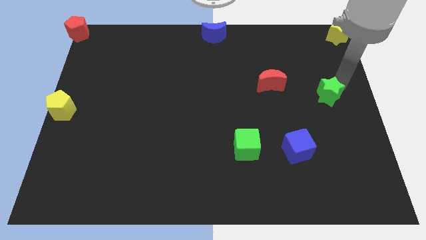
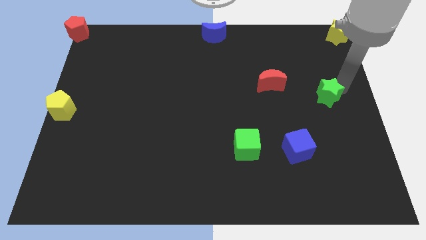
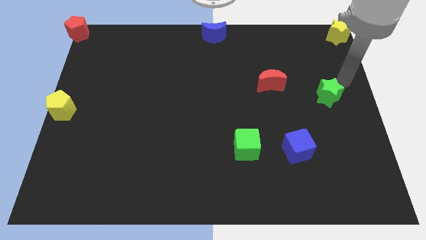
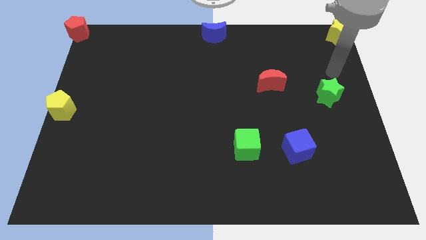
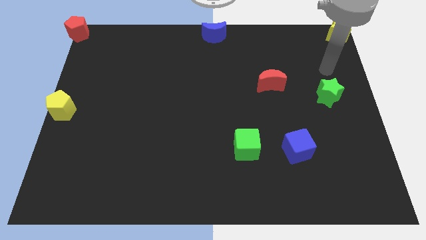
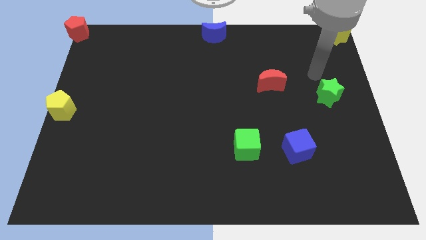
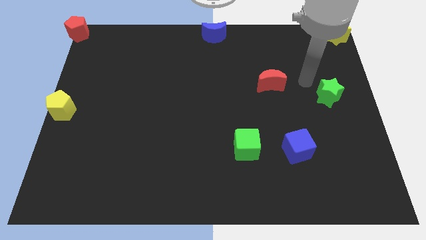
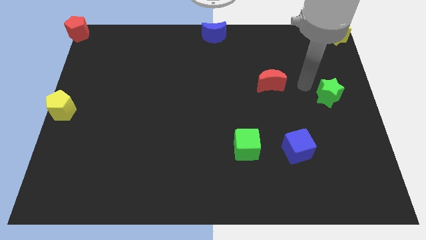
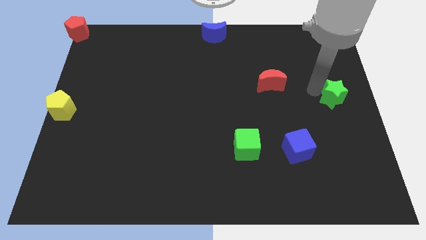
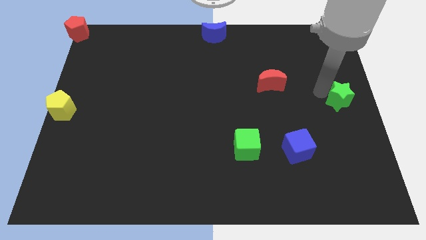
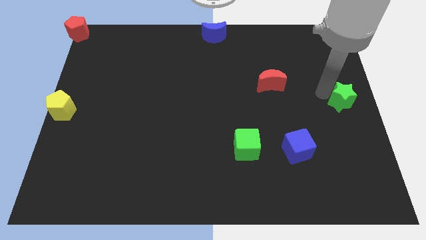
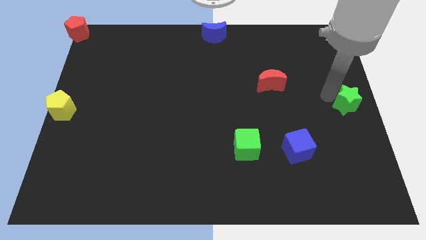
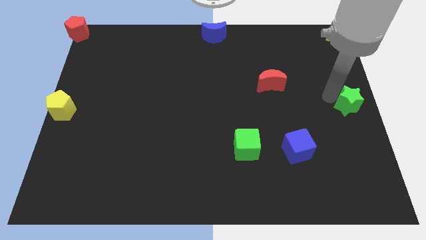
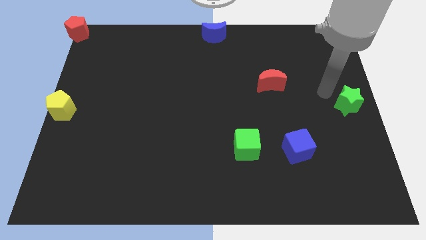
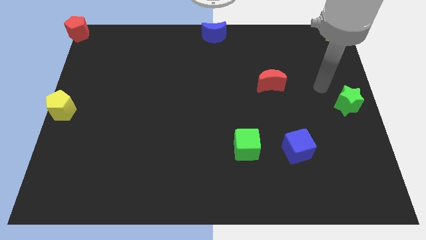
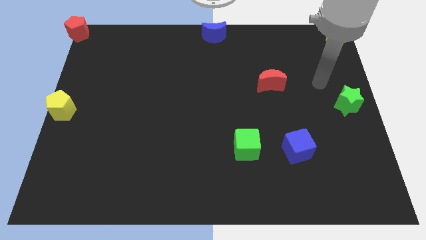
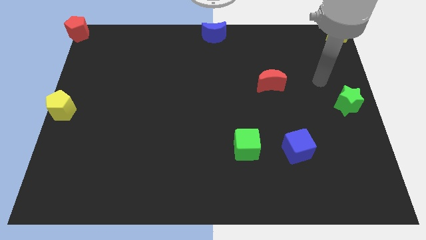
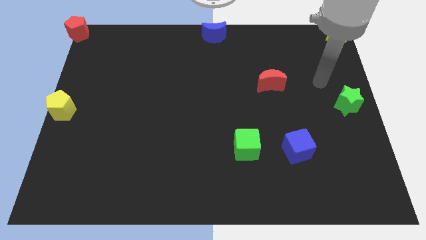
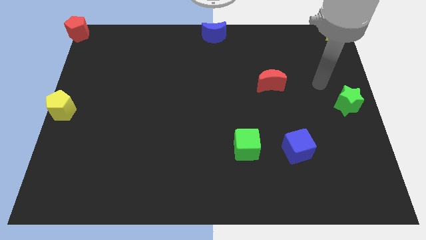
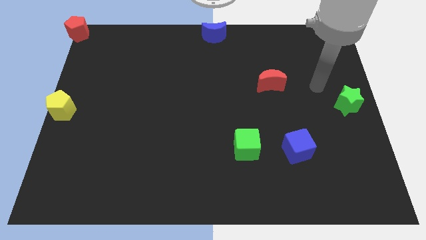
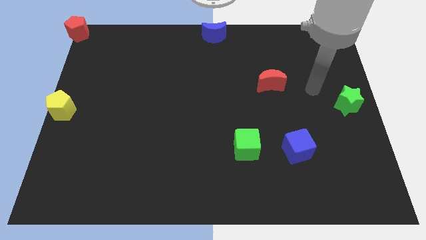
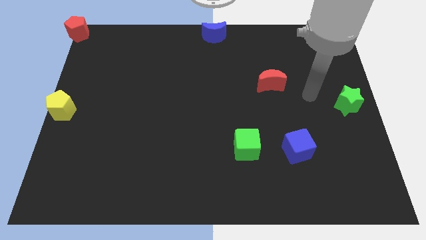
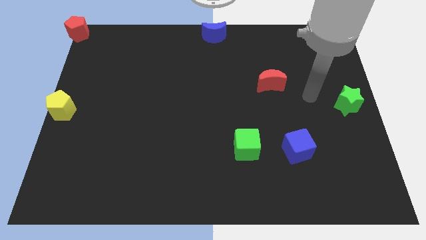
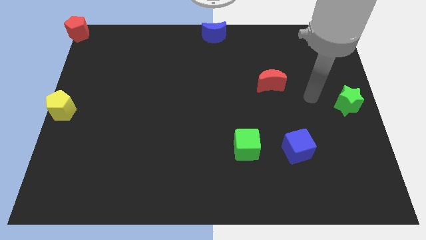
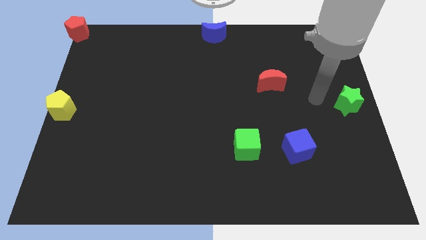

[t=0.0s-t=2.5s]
push green star downwards of the board

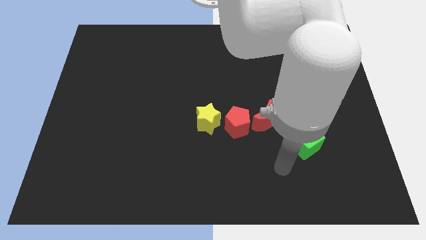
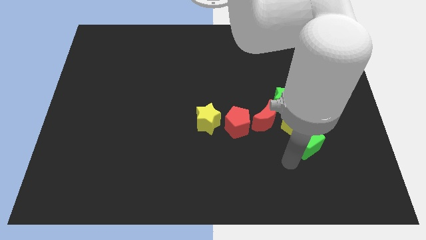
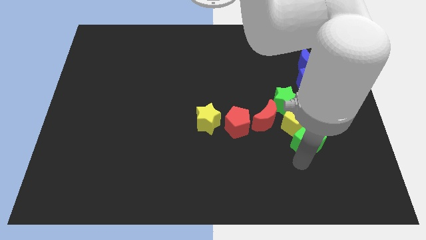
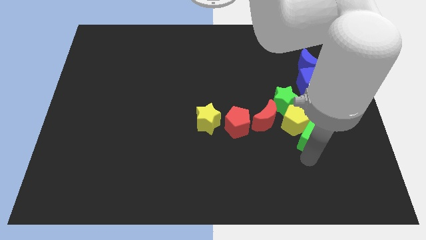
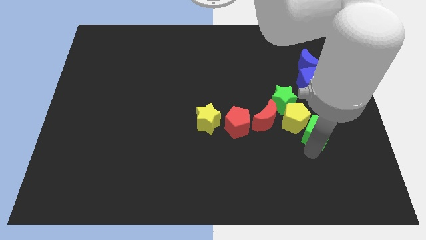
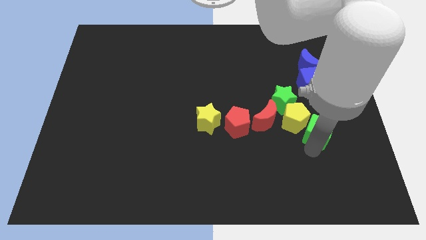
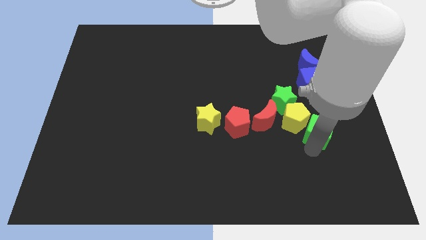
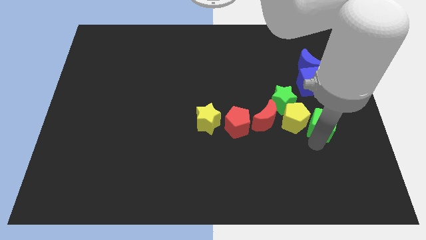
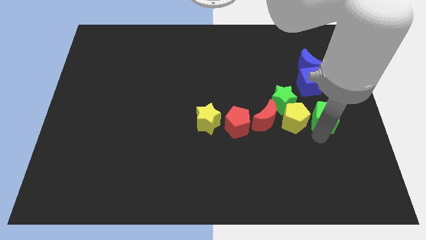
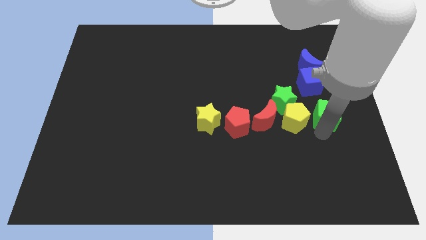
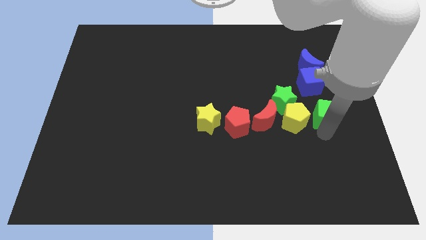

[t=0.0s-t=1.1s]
place the green cube right to the yellow pentagon

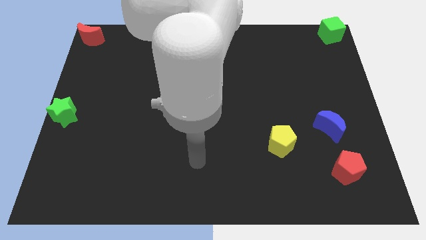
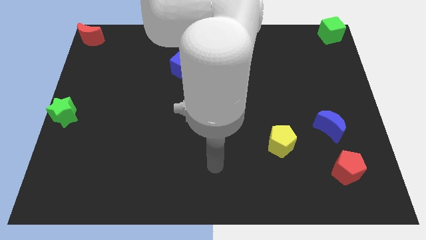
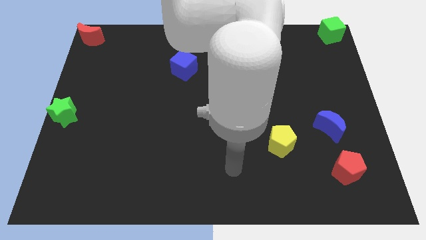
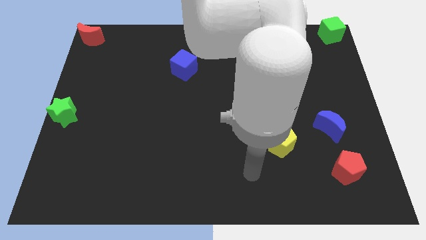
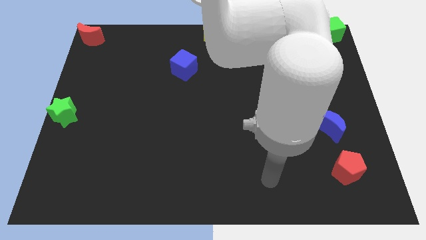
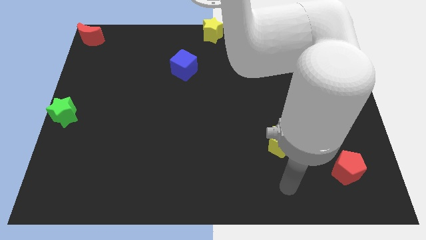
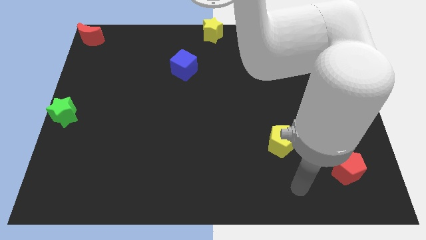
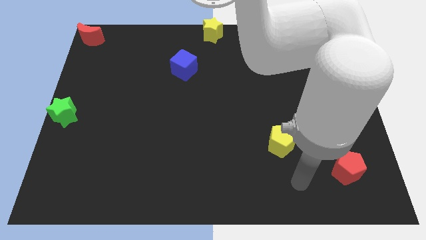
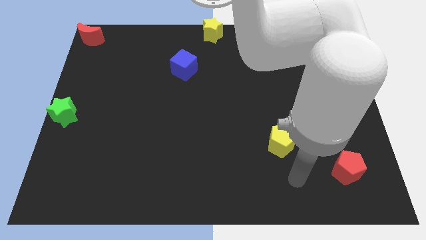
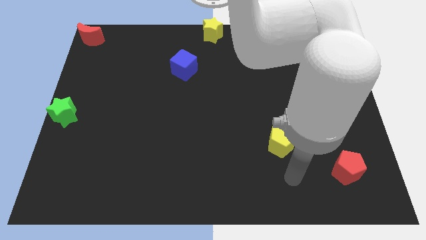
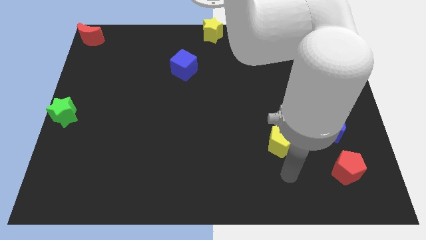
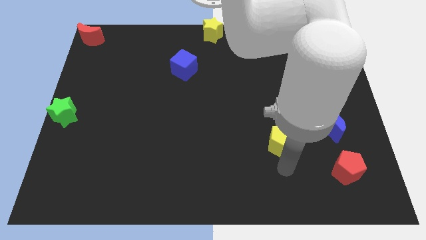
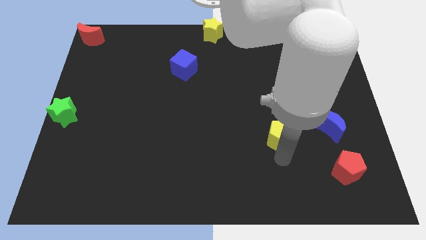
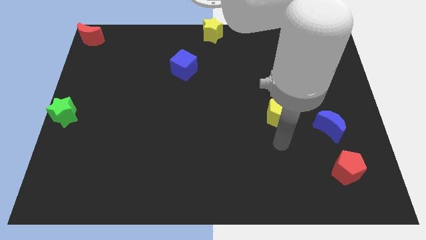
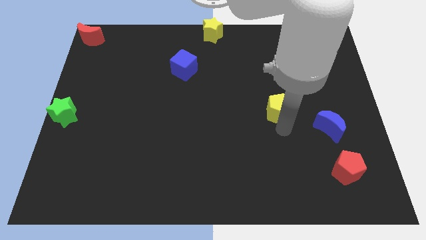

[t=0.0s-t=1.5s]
pull yellow pentagon slightly to top side of the board

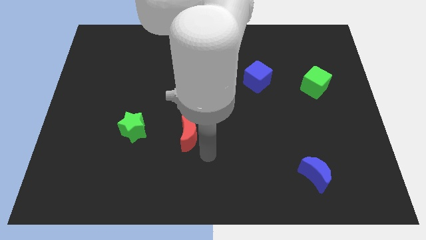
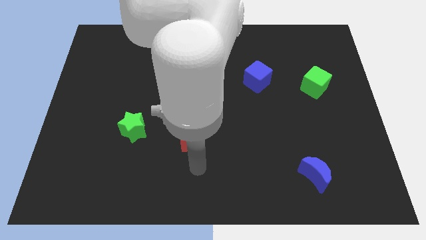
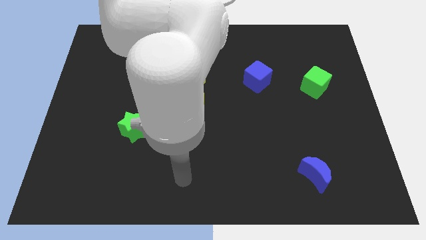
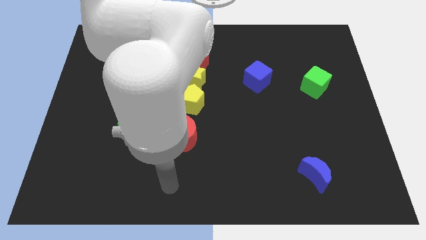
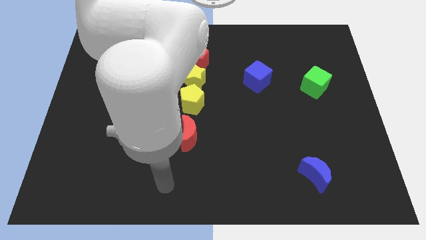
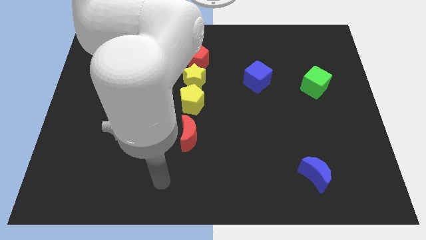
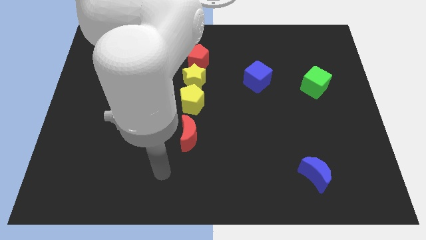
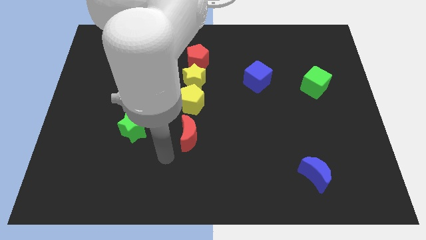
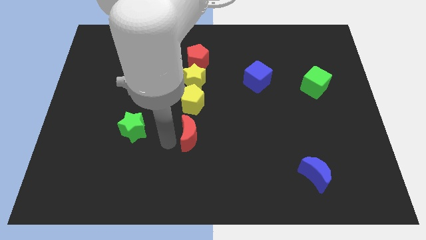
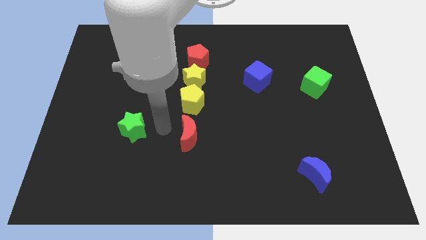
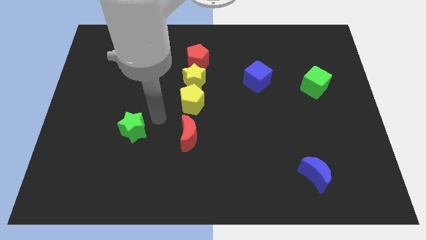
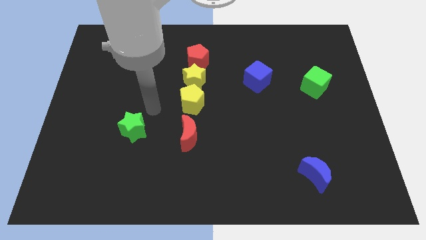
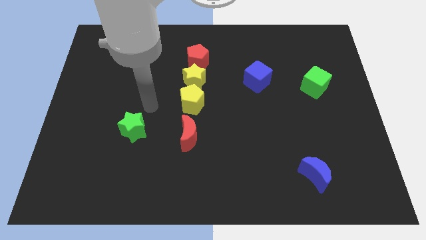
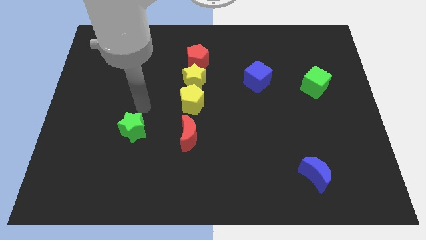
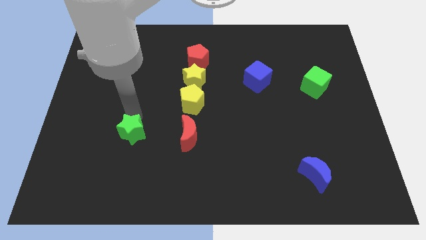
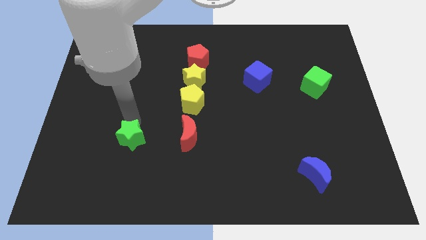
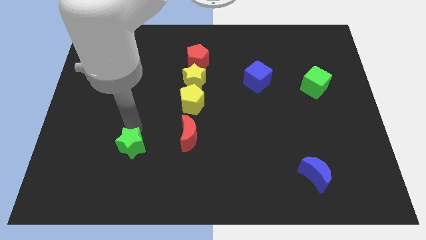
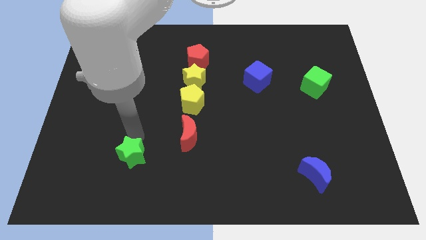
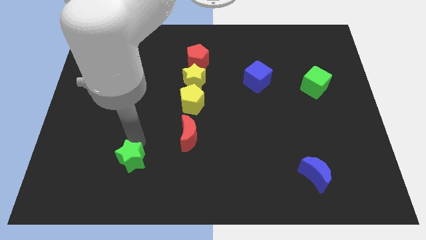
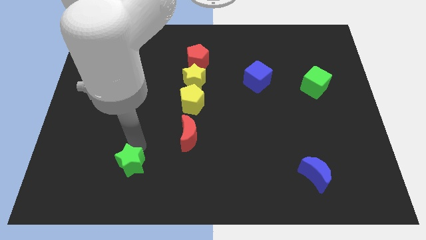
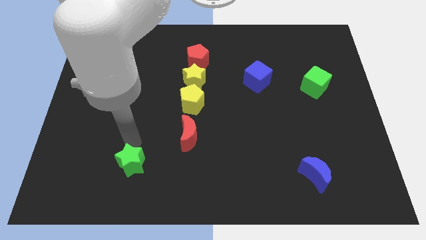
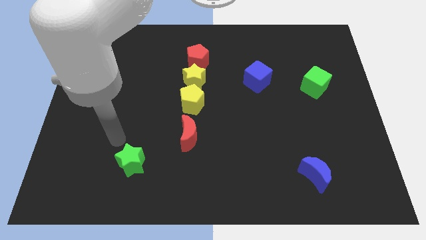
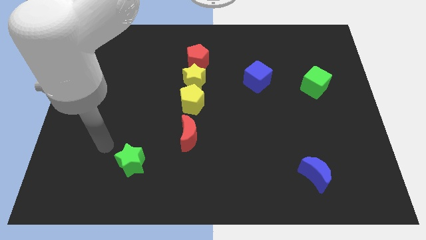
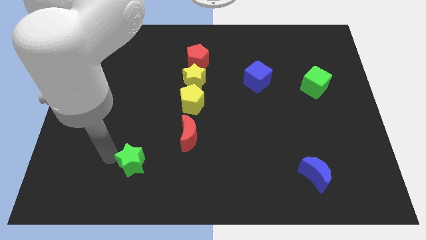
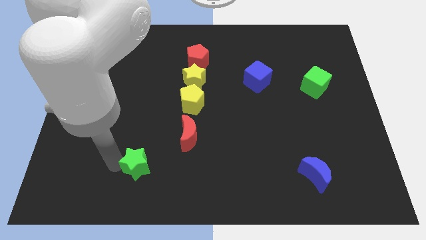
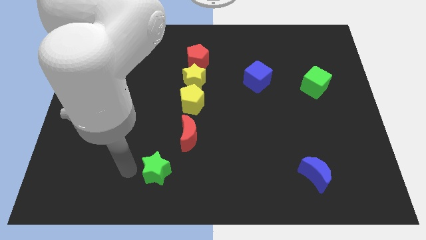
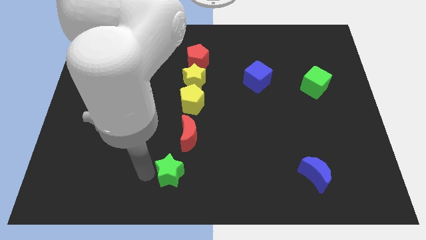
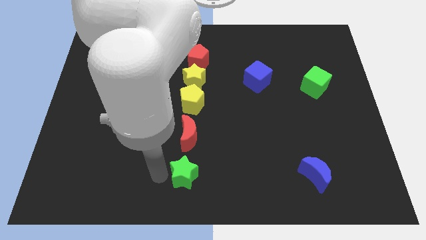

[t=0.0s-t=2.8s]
move the green star below the red moon

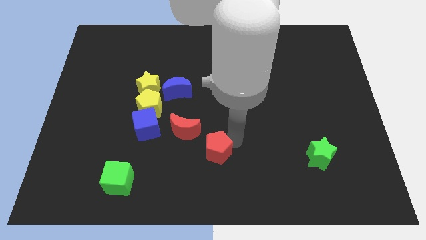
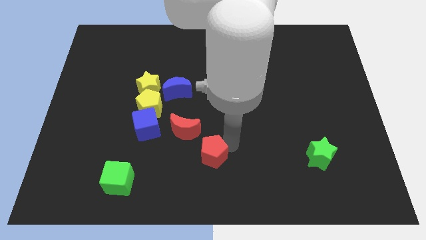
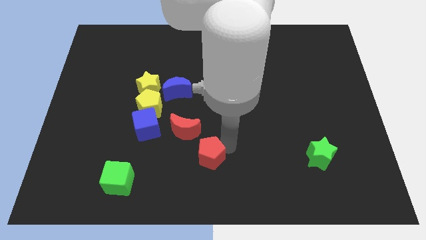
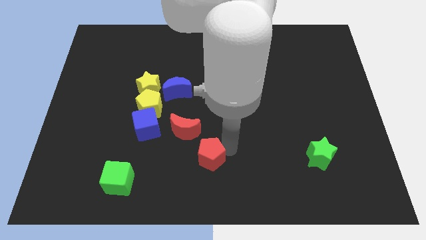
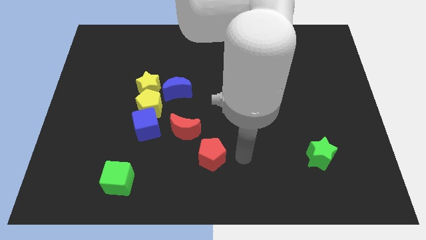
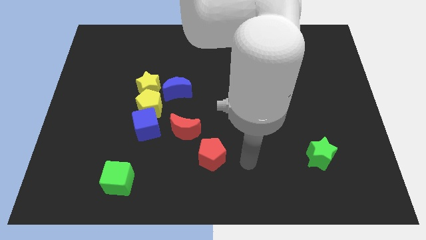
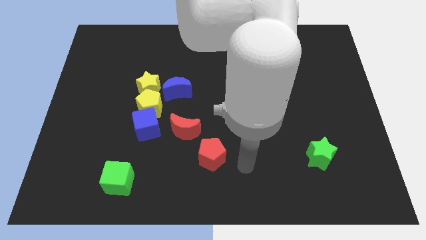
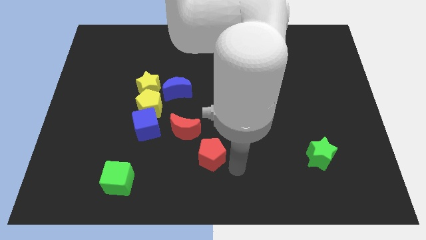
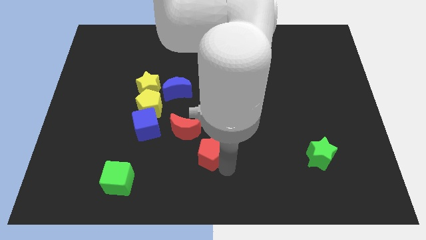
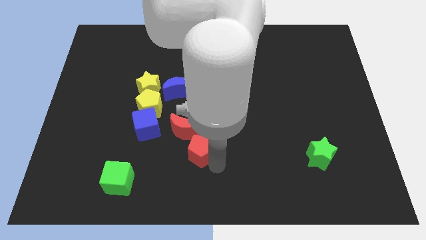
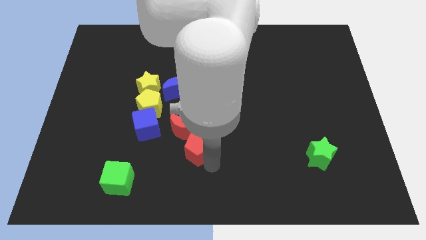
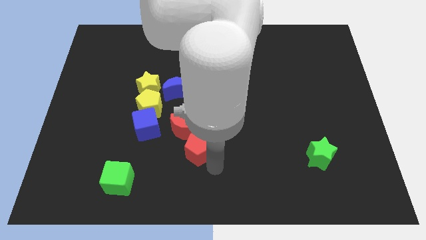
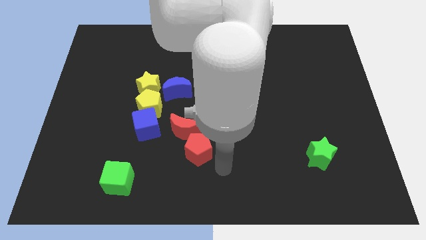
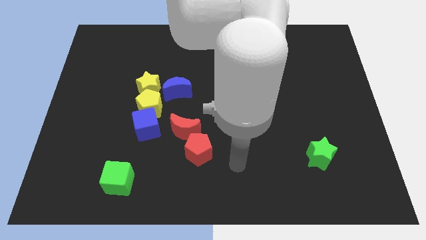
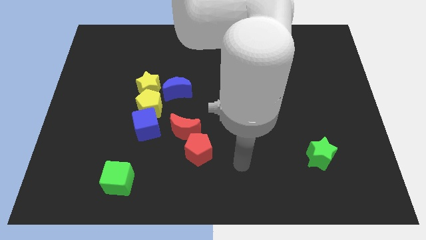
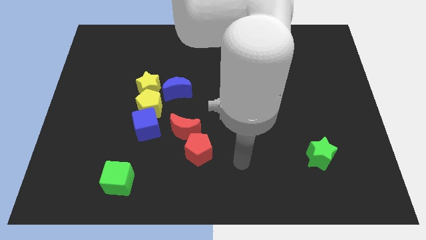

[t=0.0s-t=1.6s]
place red pentagon below the red crescent
